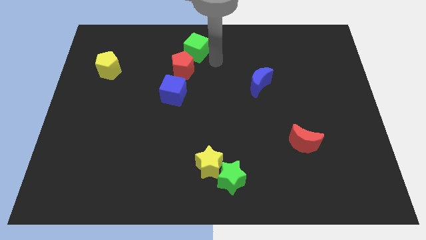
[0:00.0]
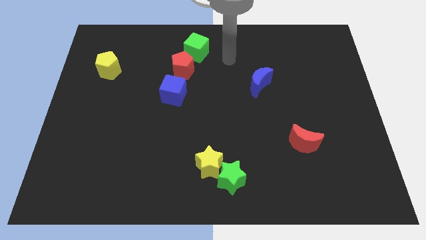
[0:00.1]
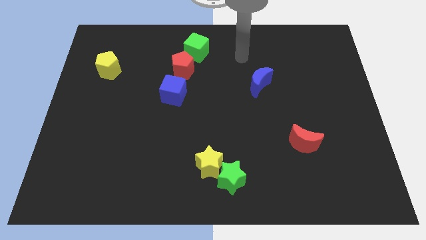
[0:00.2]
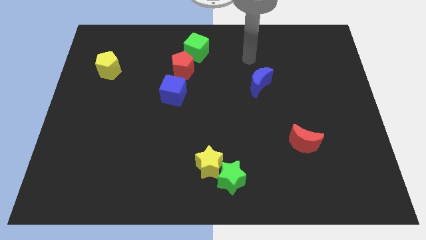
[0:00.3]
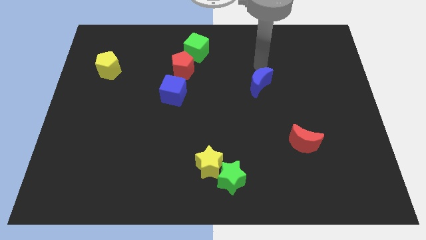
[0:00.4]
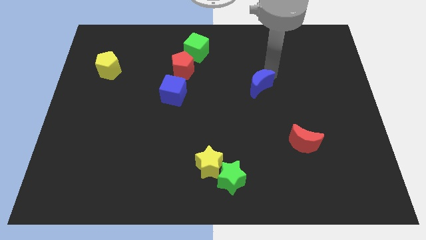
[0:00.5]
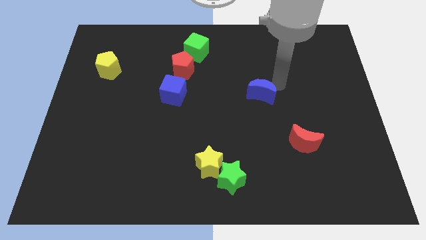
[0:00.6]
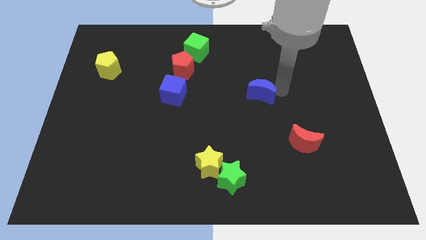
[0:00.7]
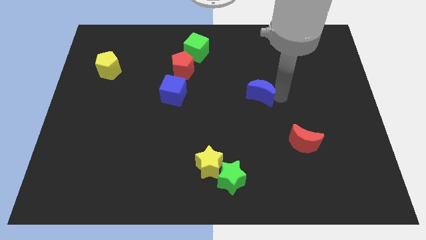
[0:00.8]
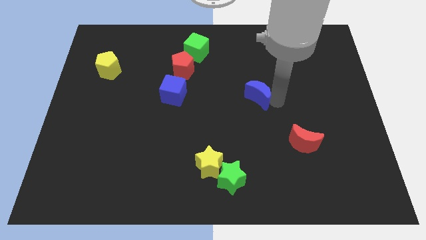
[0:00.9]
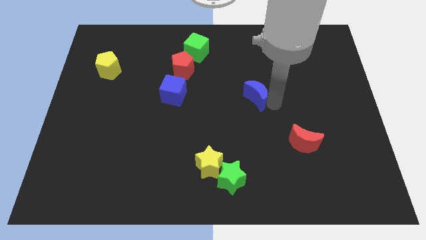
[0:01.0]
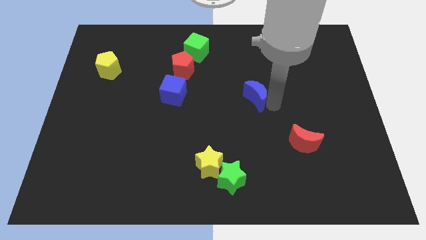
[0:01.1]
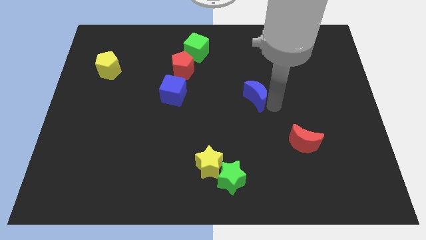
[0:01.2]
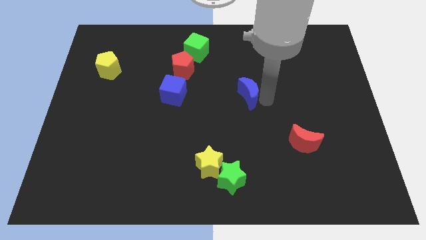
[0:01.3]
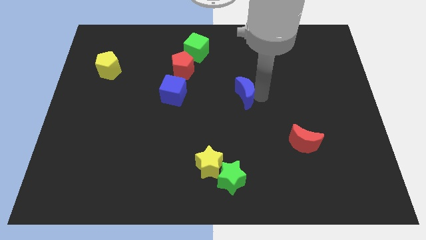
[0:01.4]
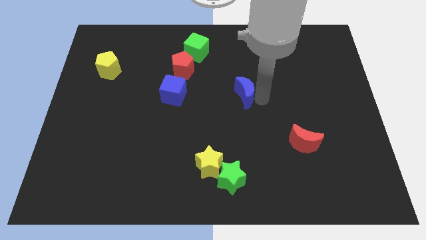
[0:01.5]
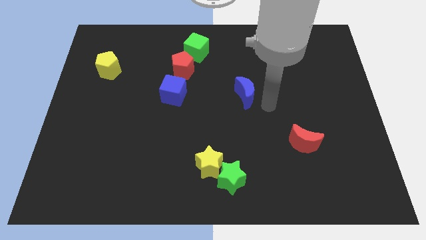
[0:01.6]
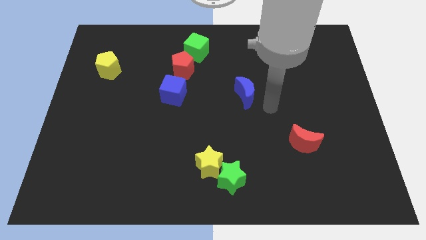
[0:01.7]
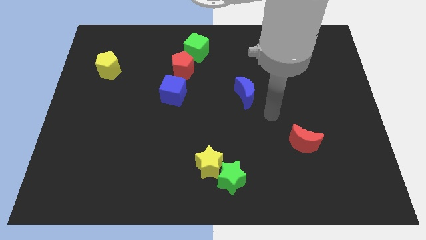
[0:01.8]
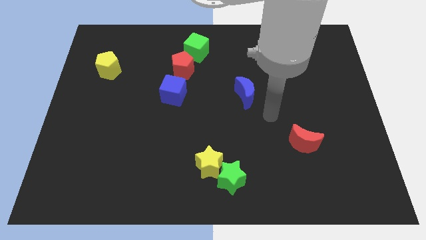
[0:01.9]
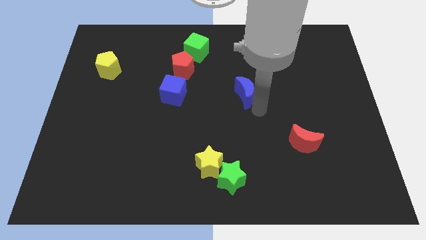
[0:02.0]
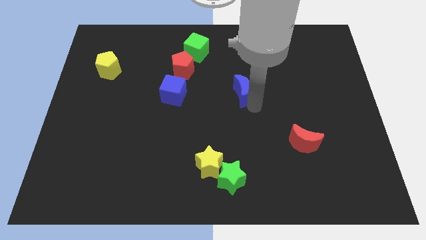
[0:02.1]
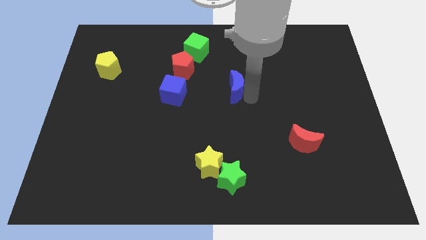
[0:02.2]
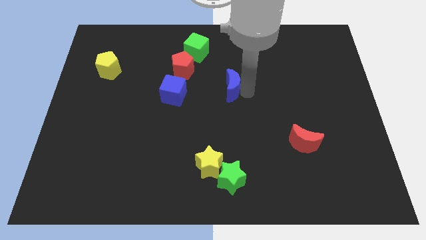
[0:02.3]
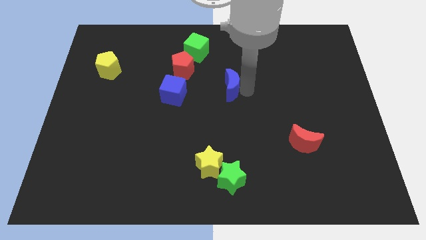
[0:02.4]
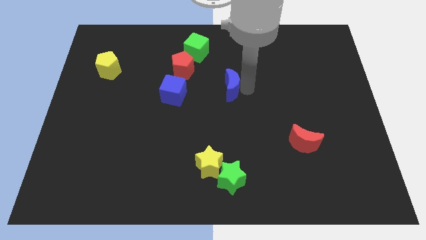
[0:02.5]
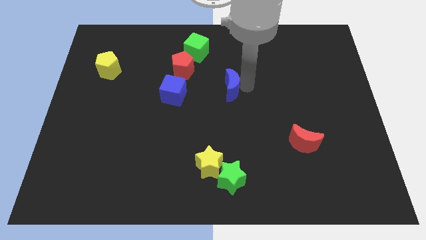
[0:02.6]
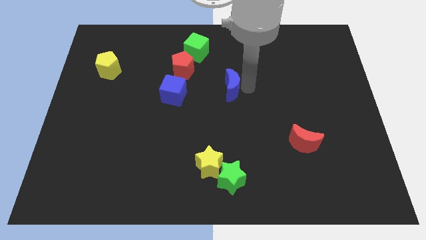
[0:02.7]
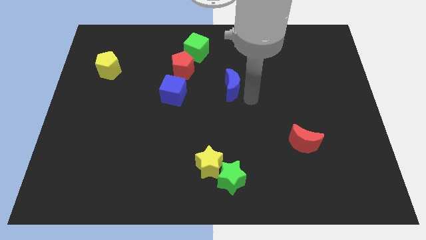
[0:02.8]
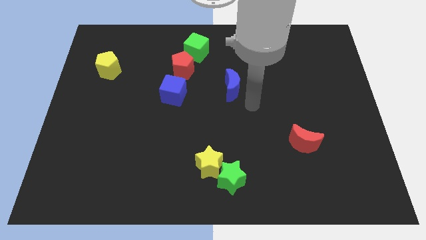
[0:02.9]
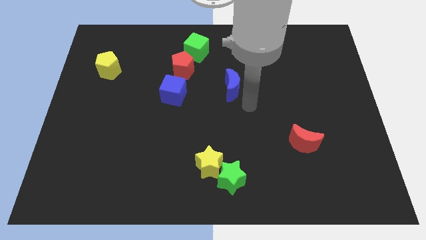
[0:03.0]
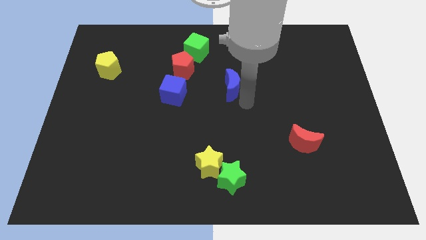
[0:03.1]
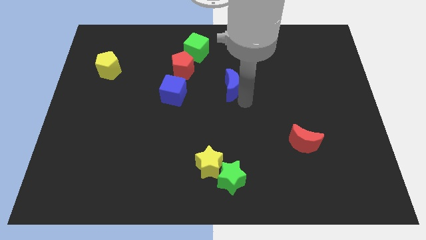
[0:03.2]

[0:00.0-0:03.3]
drag the blue crescent towards the red pentagon

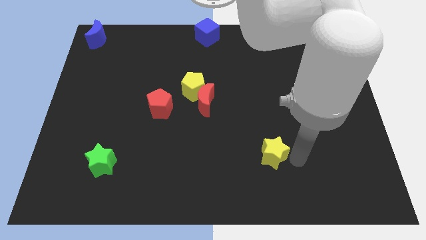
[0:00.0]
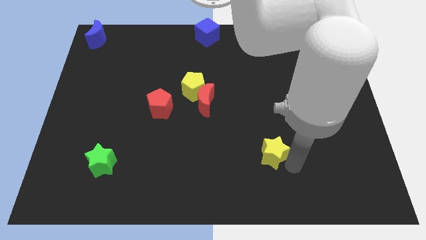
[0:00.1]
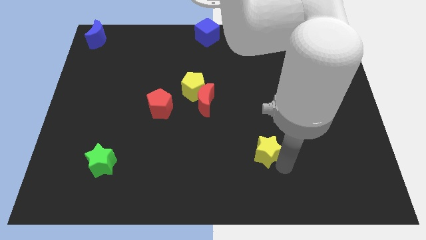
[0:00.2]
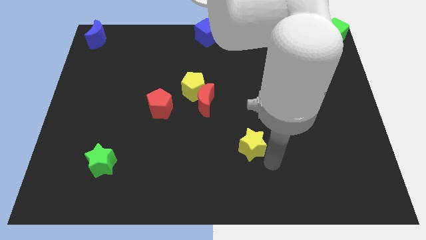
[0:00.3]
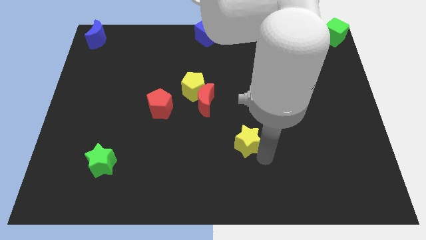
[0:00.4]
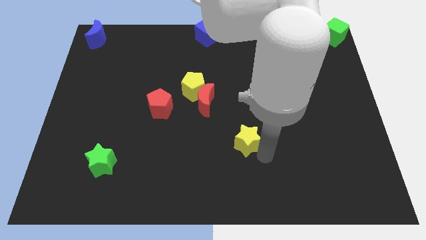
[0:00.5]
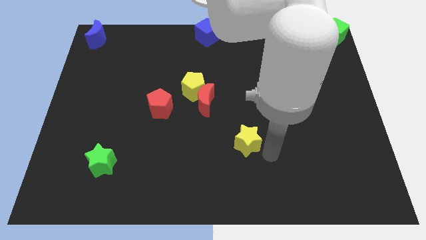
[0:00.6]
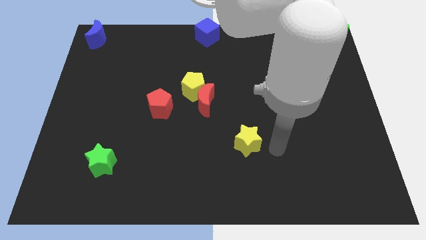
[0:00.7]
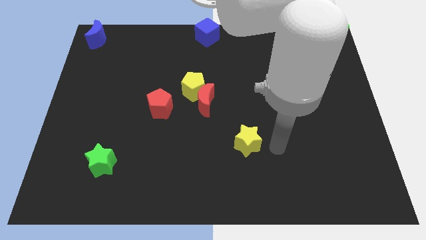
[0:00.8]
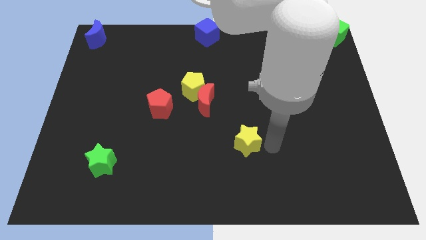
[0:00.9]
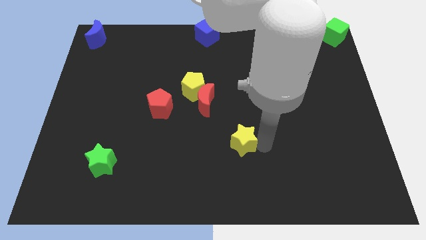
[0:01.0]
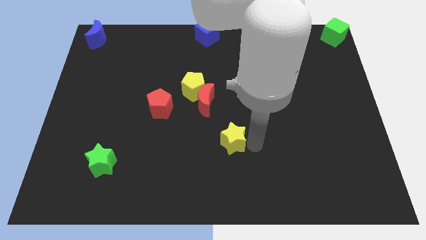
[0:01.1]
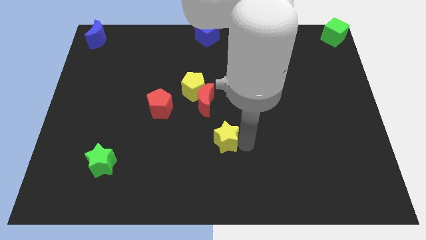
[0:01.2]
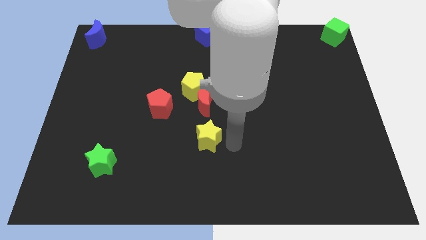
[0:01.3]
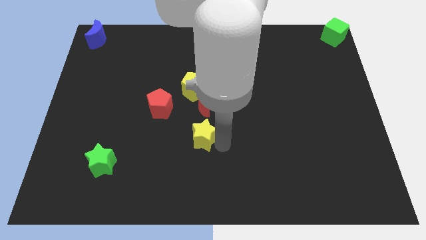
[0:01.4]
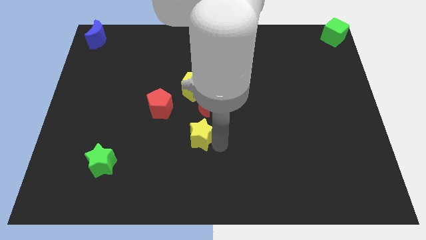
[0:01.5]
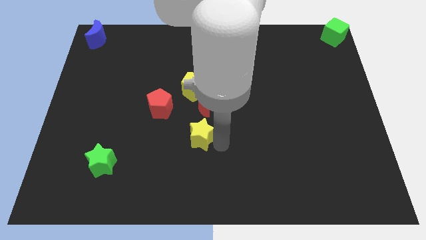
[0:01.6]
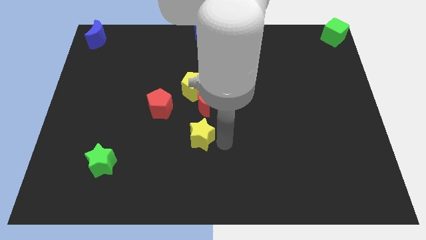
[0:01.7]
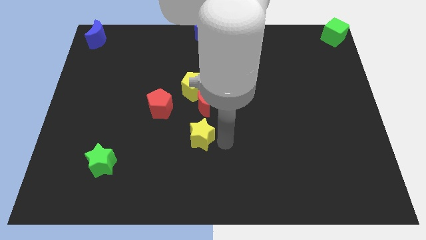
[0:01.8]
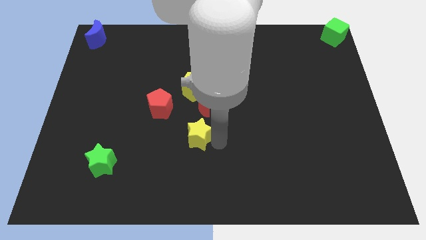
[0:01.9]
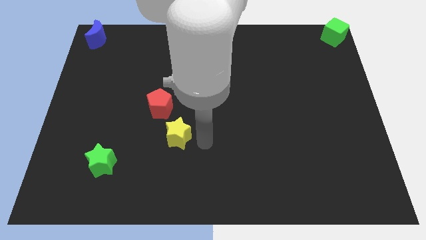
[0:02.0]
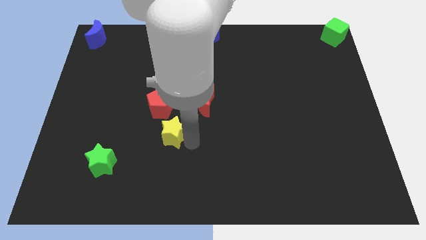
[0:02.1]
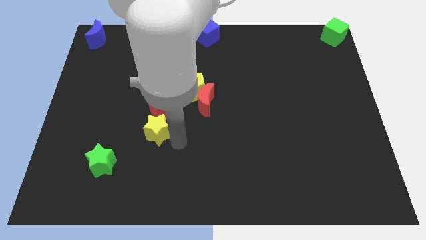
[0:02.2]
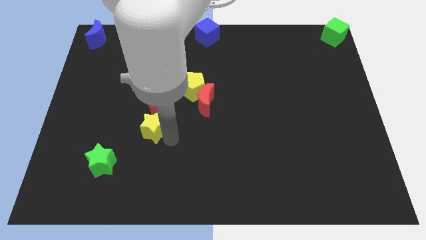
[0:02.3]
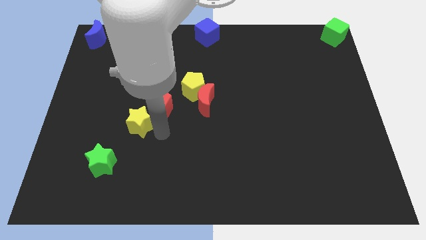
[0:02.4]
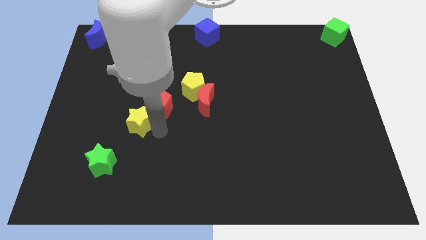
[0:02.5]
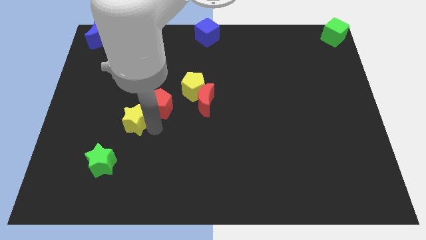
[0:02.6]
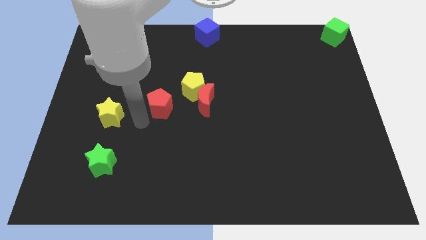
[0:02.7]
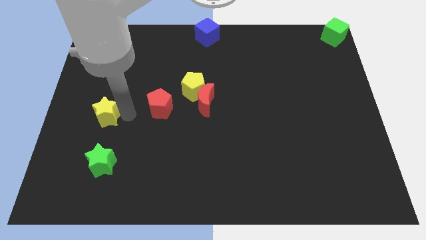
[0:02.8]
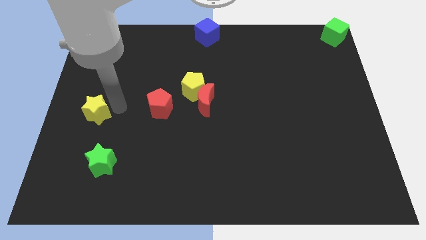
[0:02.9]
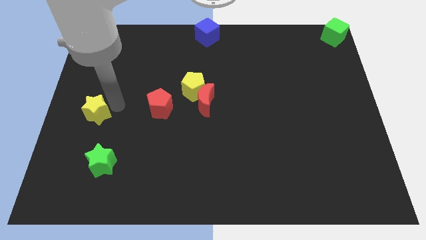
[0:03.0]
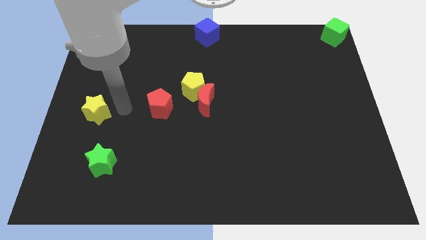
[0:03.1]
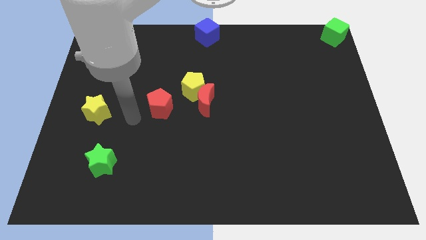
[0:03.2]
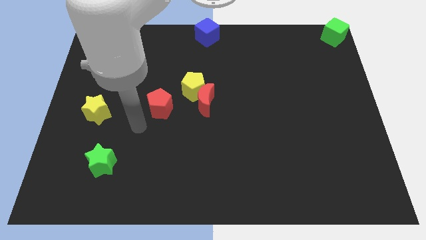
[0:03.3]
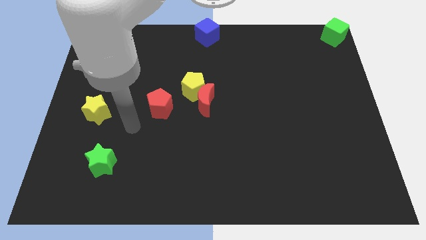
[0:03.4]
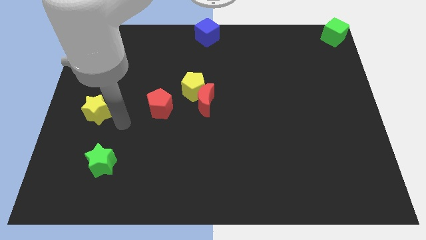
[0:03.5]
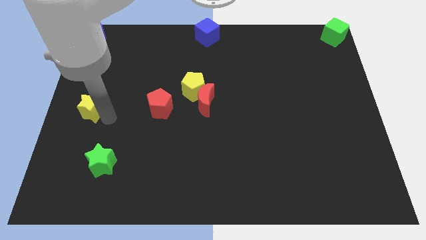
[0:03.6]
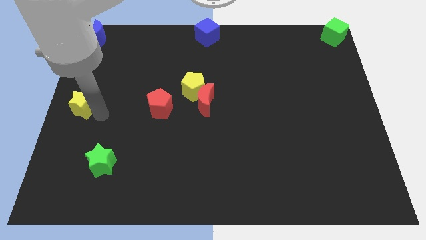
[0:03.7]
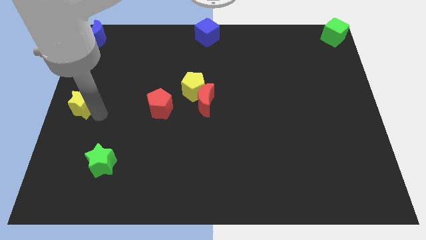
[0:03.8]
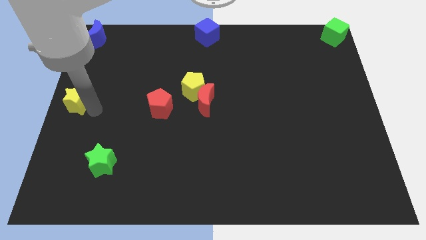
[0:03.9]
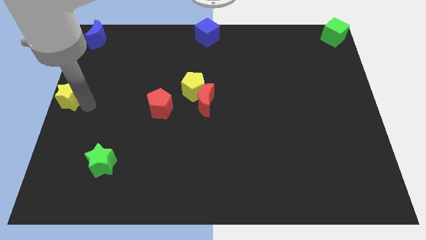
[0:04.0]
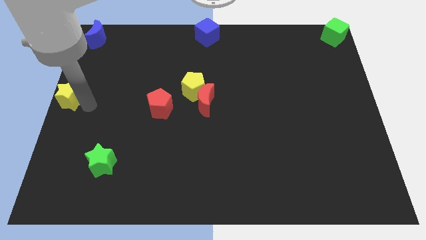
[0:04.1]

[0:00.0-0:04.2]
slide the yellow star to the centre left of the board

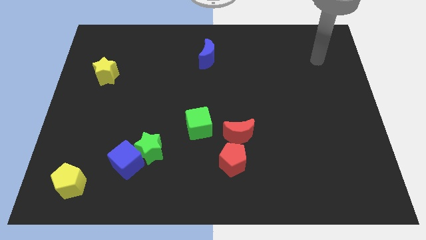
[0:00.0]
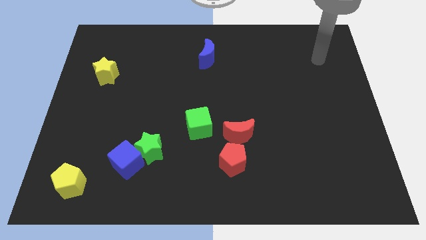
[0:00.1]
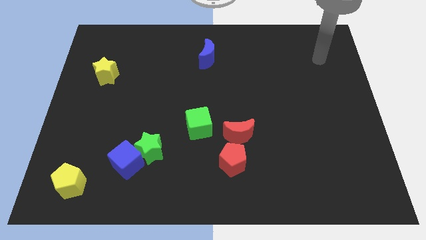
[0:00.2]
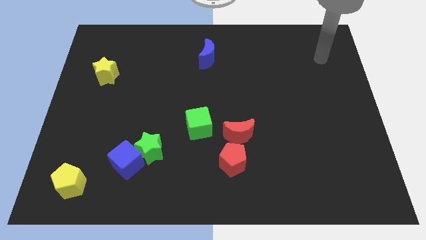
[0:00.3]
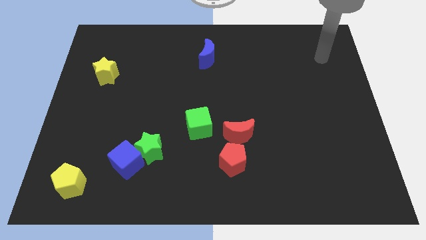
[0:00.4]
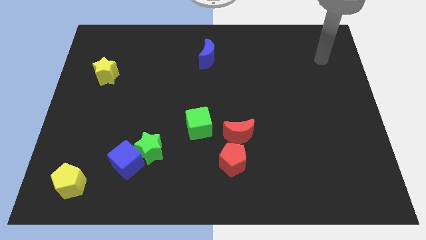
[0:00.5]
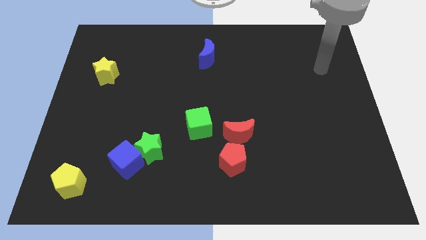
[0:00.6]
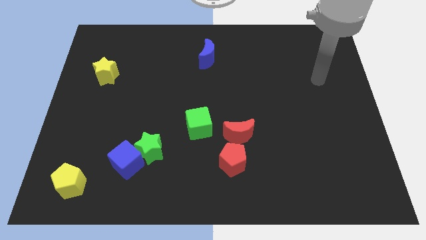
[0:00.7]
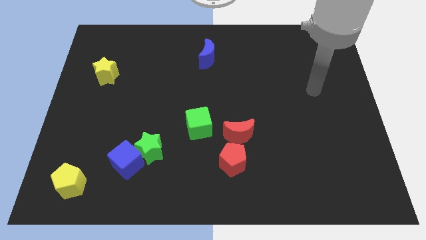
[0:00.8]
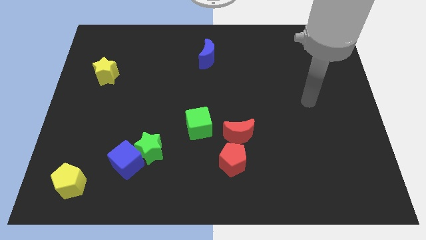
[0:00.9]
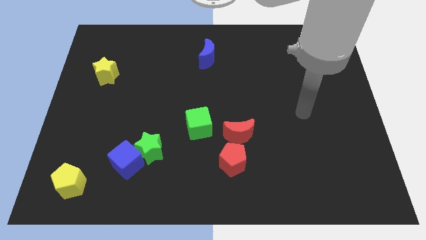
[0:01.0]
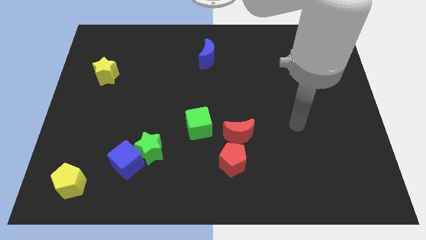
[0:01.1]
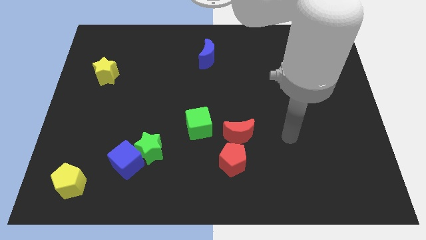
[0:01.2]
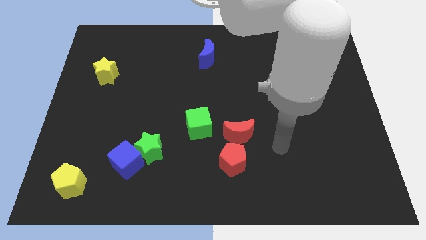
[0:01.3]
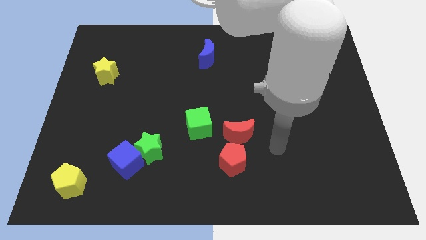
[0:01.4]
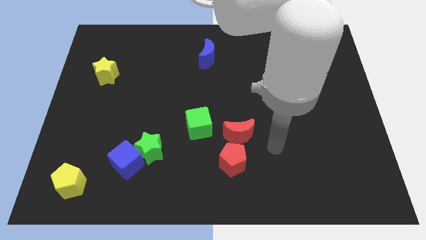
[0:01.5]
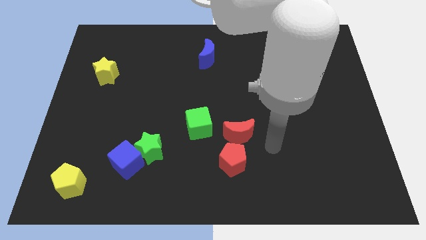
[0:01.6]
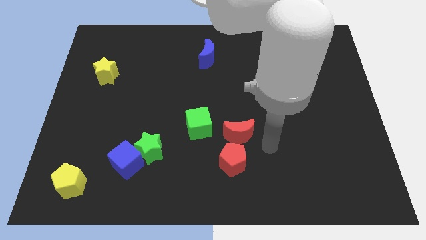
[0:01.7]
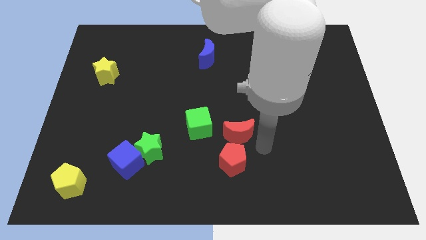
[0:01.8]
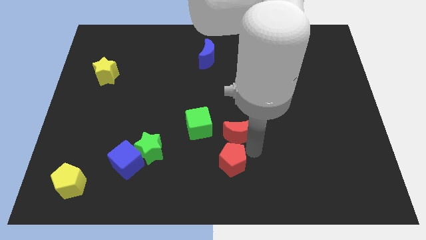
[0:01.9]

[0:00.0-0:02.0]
place your arm at right side of the red pentagon
